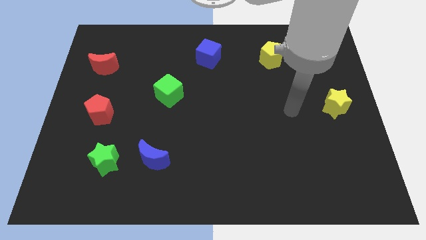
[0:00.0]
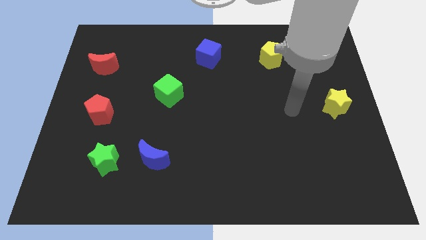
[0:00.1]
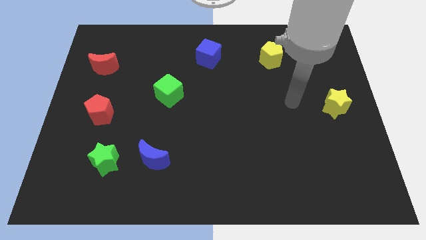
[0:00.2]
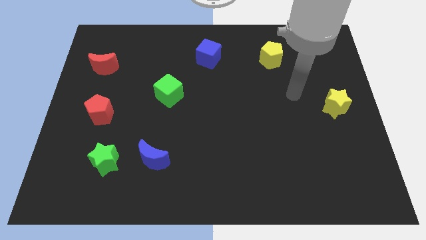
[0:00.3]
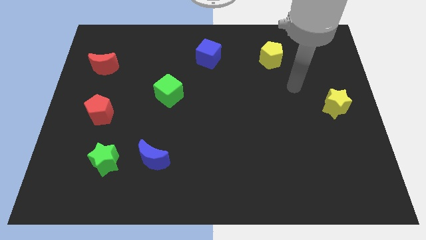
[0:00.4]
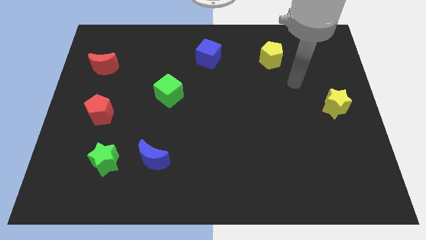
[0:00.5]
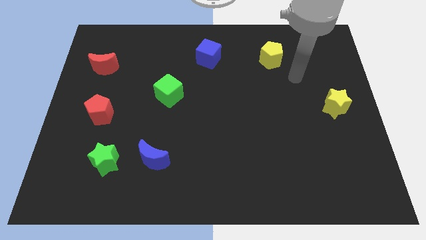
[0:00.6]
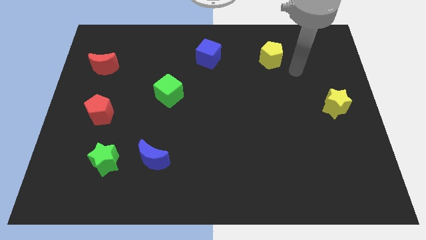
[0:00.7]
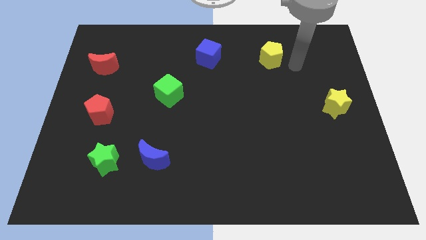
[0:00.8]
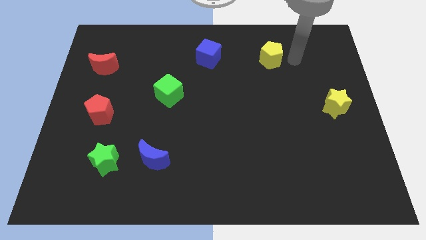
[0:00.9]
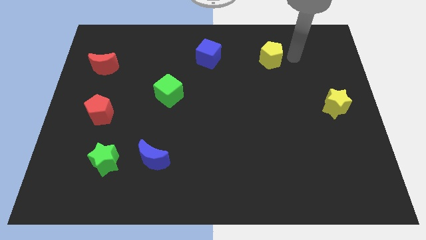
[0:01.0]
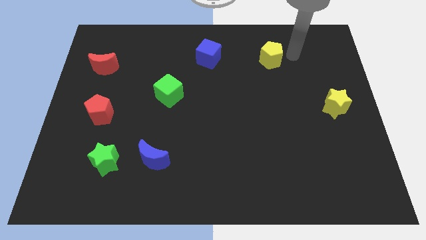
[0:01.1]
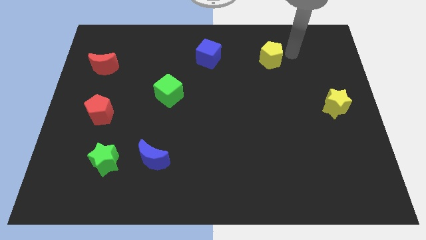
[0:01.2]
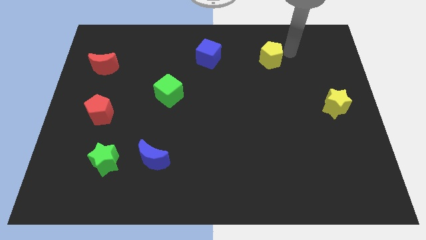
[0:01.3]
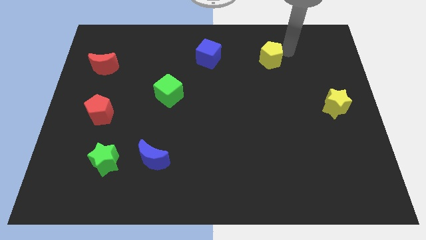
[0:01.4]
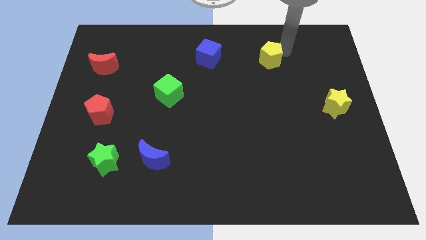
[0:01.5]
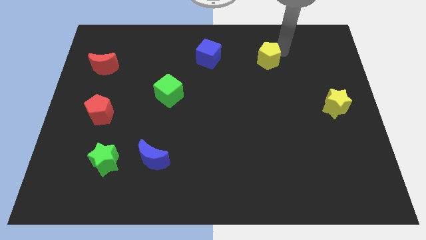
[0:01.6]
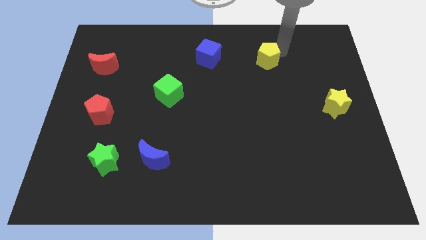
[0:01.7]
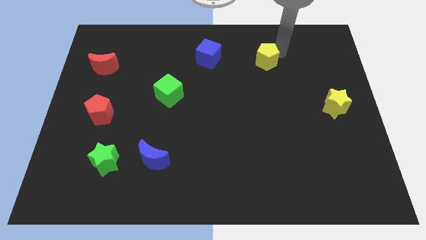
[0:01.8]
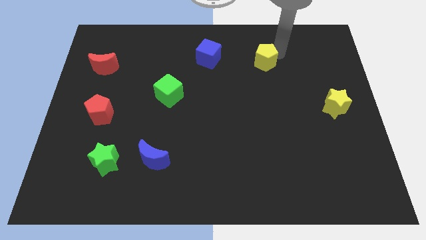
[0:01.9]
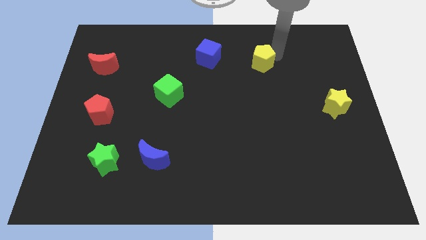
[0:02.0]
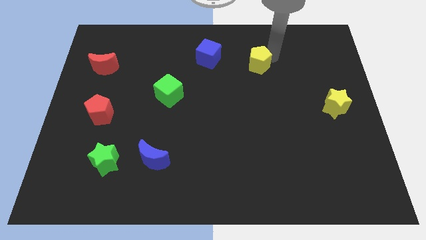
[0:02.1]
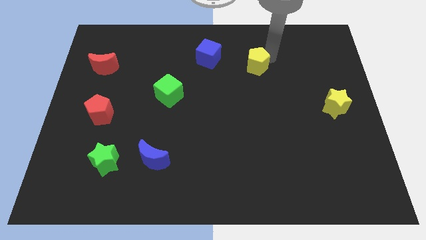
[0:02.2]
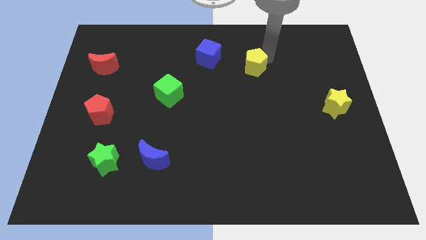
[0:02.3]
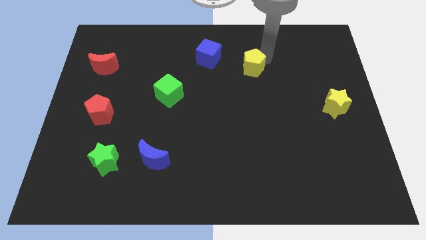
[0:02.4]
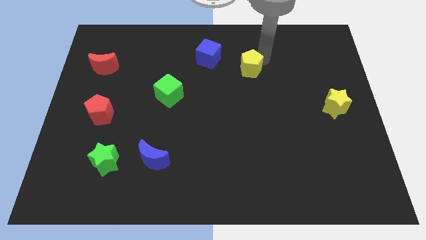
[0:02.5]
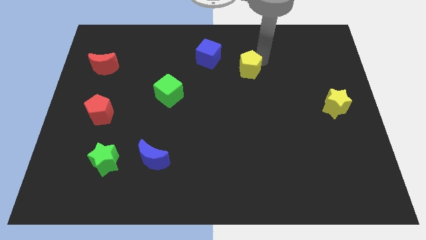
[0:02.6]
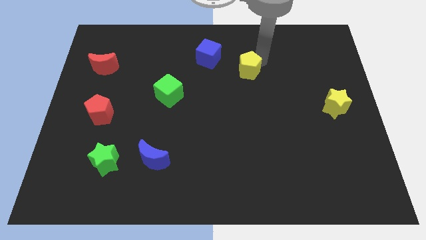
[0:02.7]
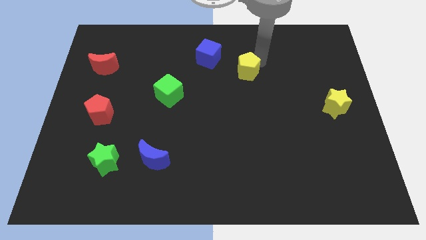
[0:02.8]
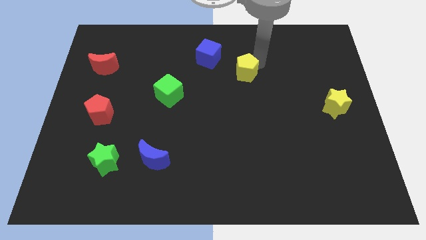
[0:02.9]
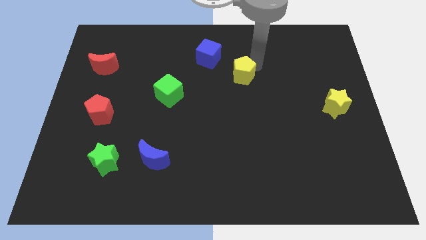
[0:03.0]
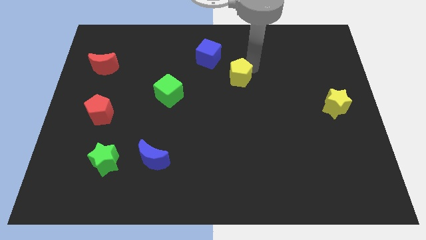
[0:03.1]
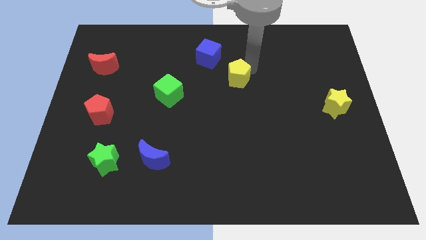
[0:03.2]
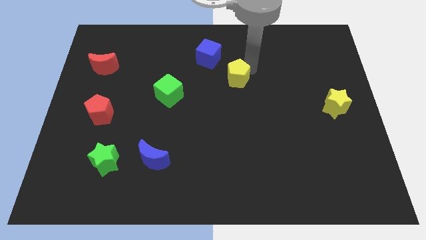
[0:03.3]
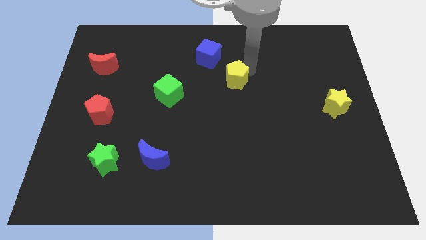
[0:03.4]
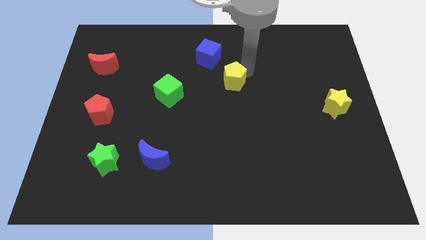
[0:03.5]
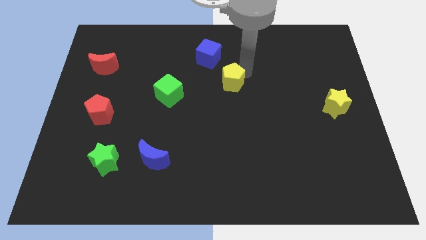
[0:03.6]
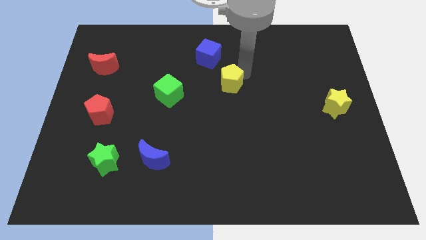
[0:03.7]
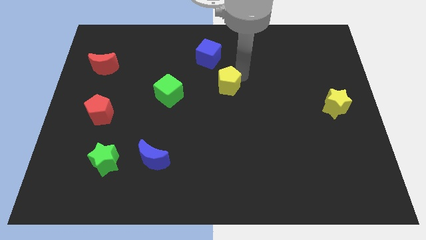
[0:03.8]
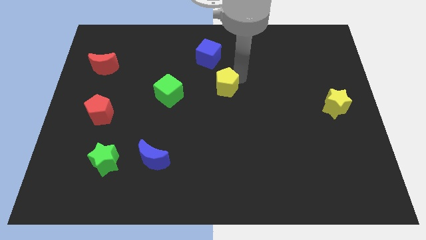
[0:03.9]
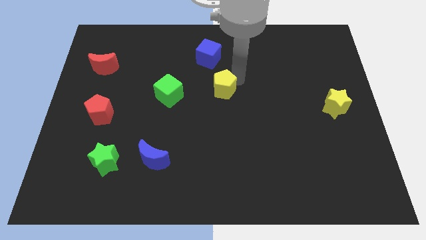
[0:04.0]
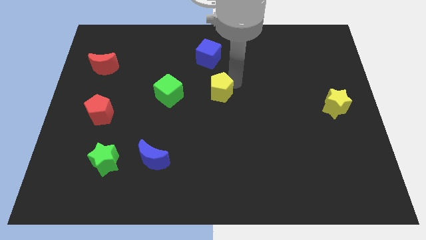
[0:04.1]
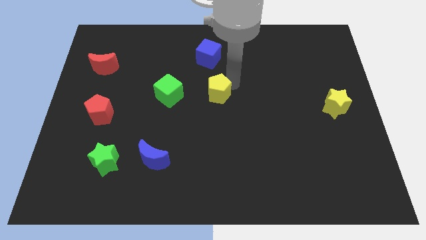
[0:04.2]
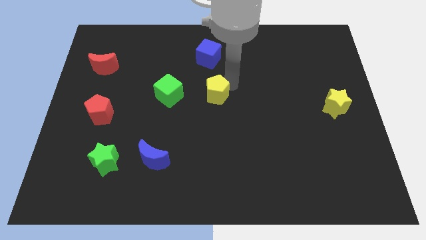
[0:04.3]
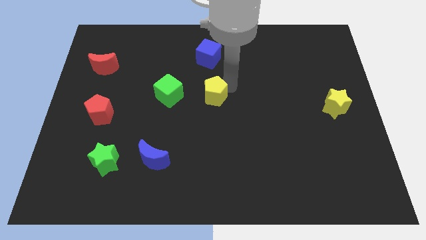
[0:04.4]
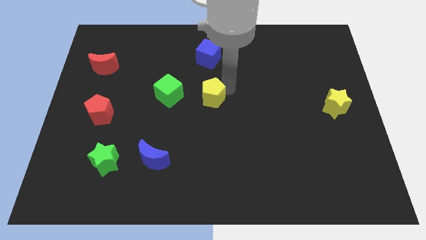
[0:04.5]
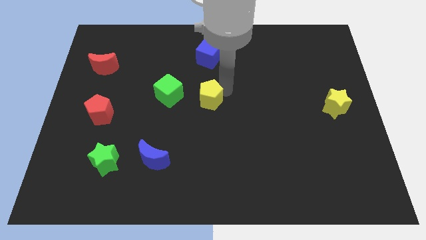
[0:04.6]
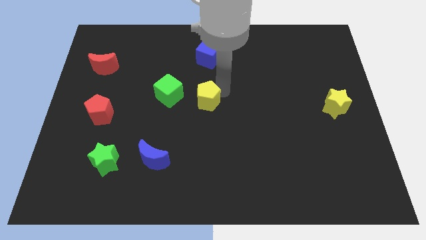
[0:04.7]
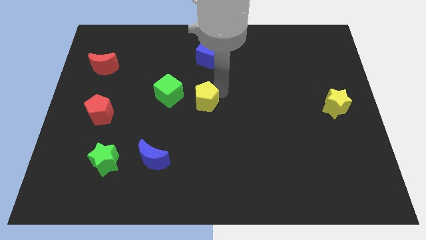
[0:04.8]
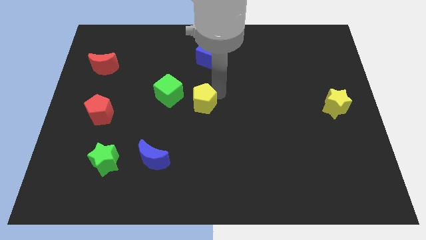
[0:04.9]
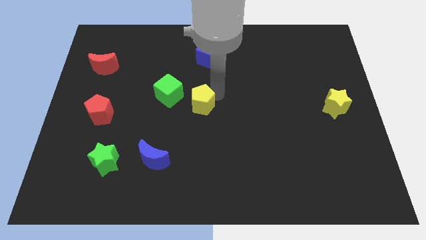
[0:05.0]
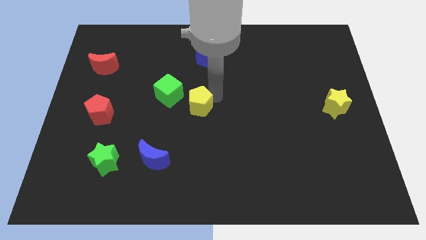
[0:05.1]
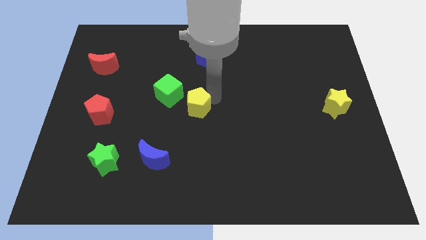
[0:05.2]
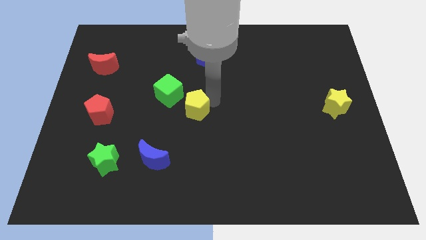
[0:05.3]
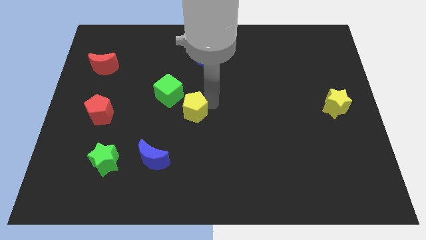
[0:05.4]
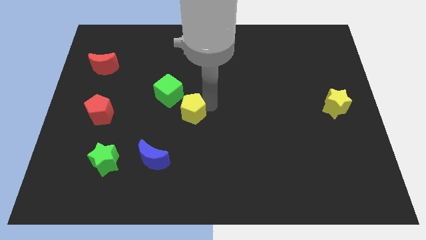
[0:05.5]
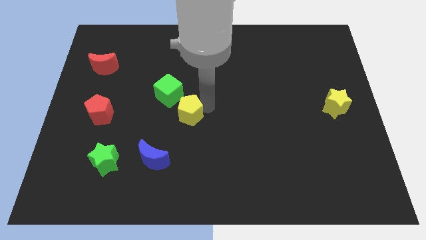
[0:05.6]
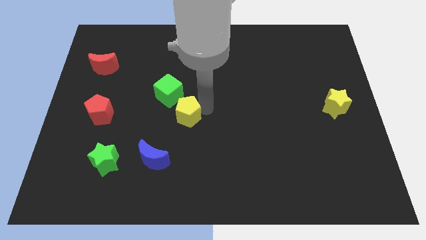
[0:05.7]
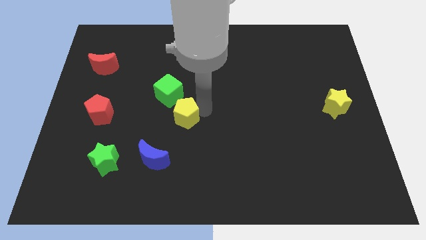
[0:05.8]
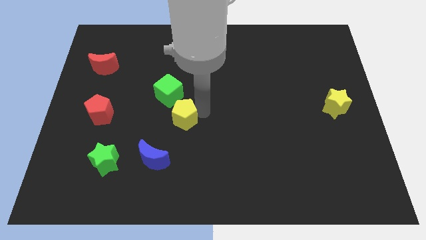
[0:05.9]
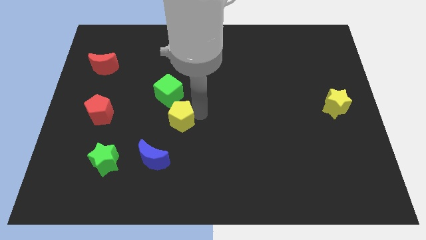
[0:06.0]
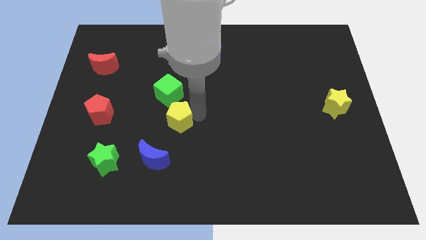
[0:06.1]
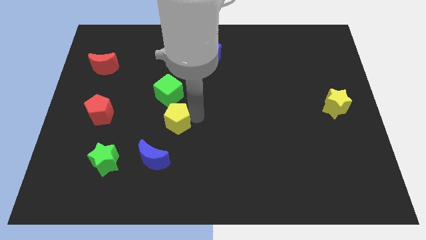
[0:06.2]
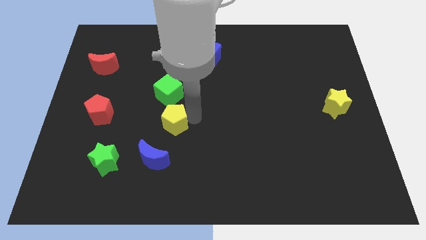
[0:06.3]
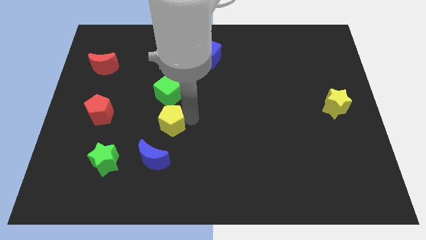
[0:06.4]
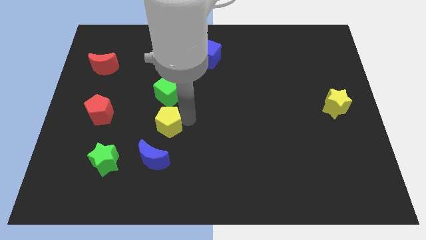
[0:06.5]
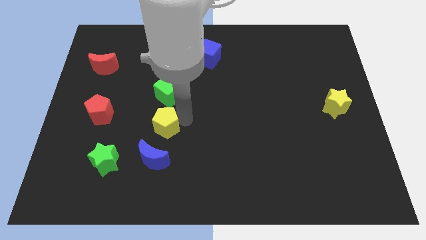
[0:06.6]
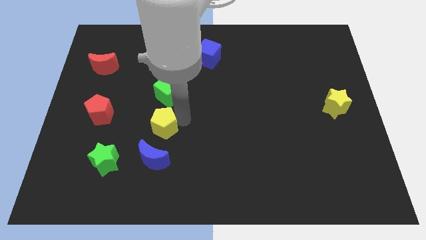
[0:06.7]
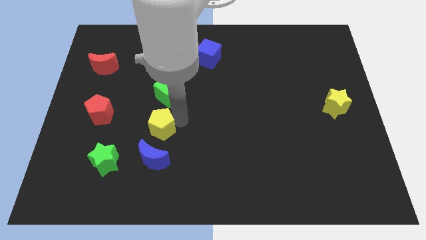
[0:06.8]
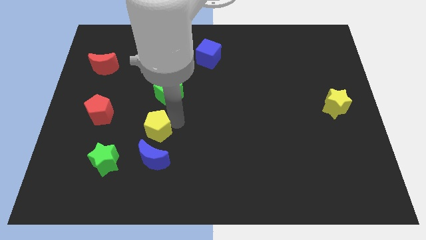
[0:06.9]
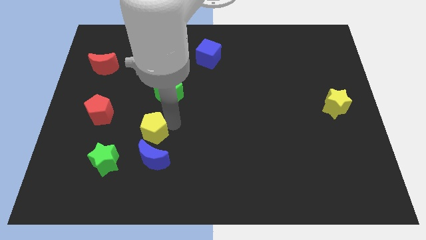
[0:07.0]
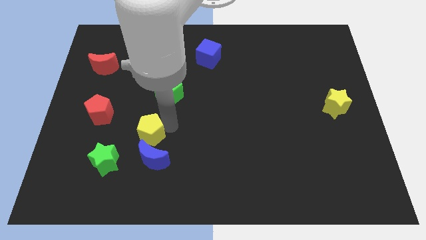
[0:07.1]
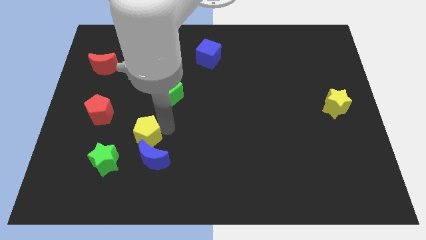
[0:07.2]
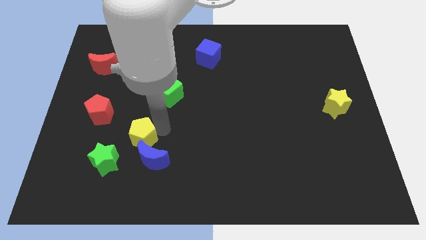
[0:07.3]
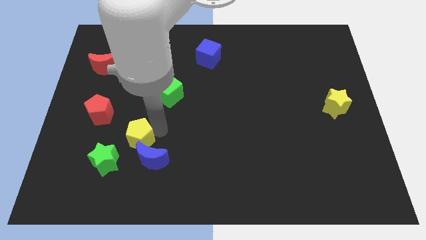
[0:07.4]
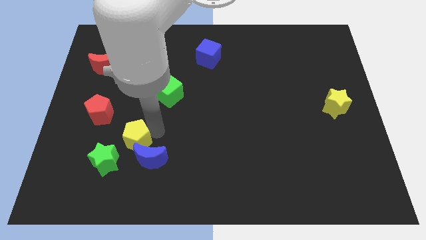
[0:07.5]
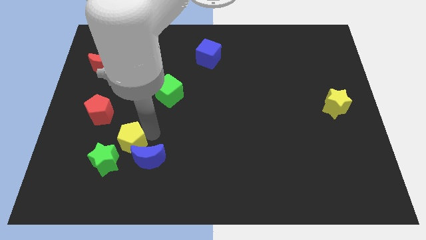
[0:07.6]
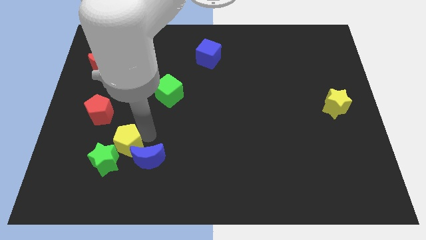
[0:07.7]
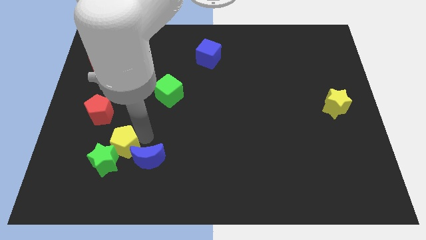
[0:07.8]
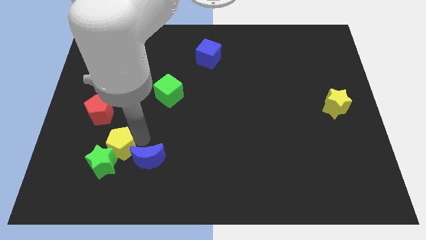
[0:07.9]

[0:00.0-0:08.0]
put the yellow pentagon close to the green star

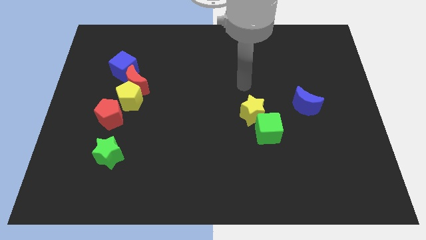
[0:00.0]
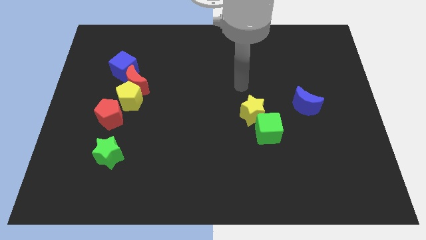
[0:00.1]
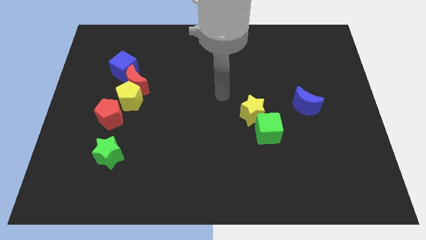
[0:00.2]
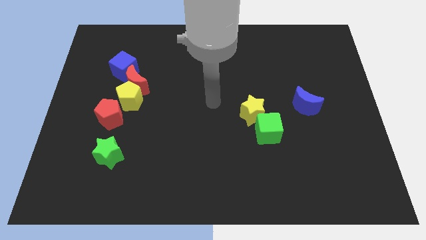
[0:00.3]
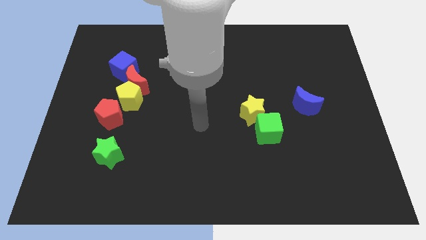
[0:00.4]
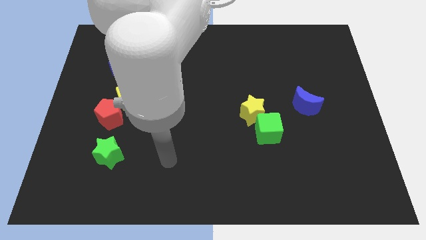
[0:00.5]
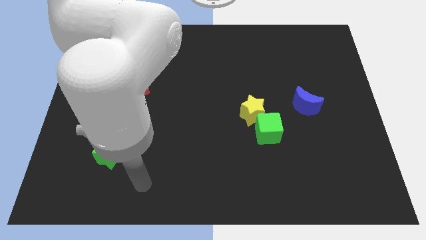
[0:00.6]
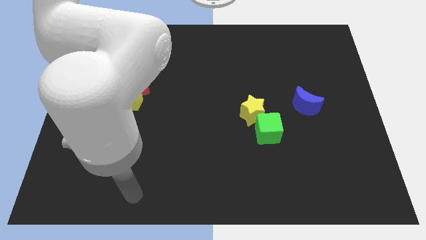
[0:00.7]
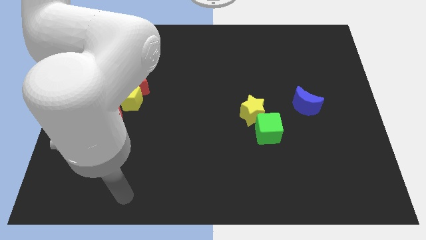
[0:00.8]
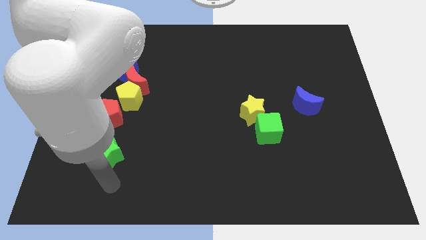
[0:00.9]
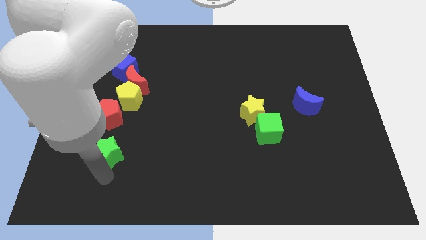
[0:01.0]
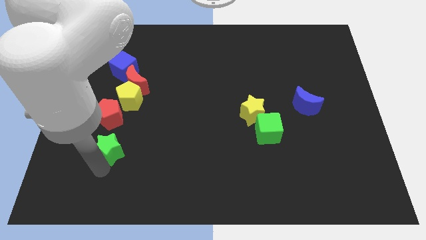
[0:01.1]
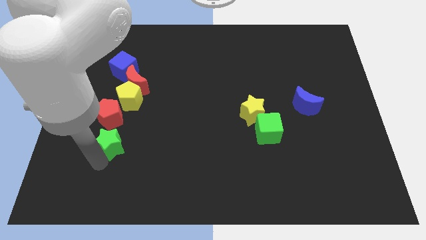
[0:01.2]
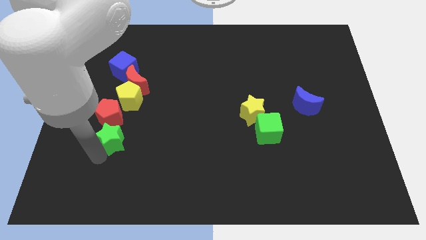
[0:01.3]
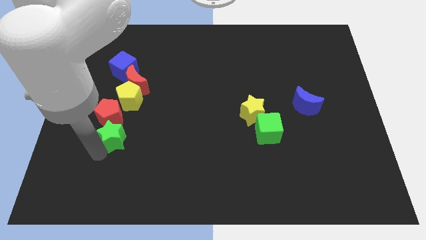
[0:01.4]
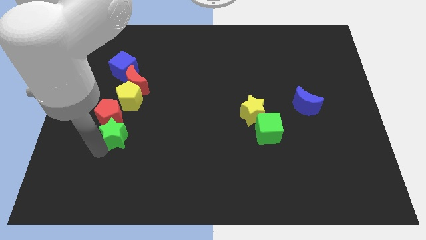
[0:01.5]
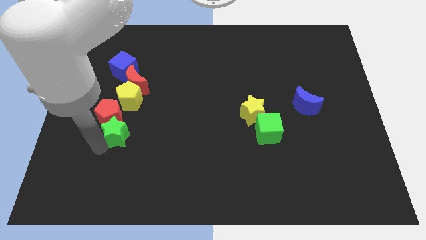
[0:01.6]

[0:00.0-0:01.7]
push the green star to the red pentagon
